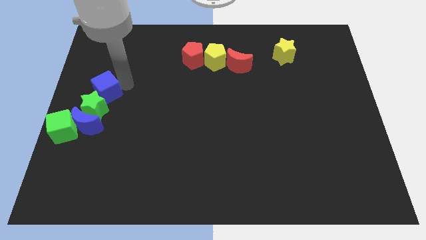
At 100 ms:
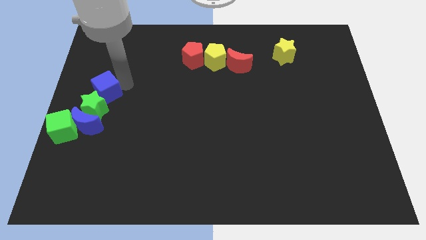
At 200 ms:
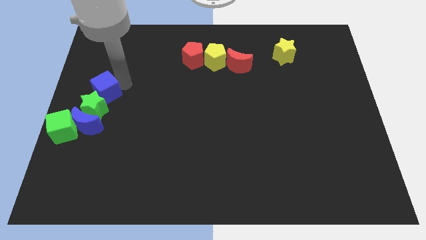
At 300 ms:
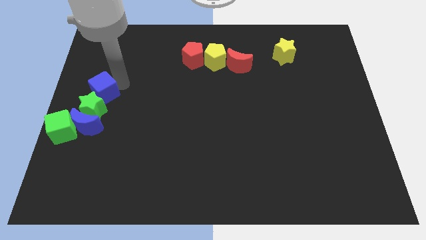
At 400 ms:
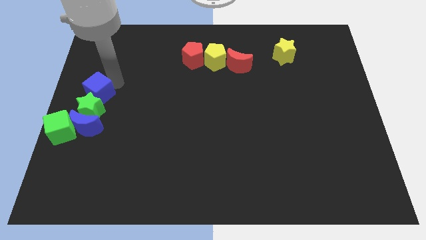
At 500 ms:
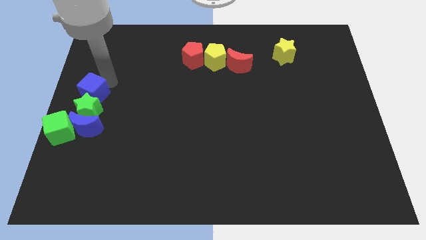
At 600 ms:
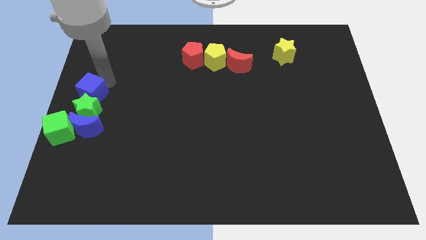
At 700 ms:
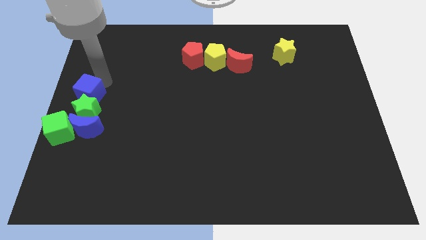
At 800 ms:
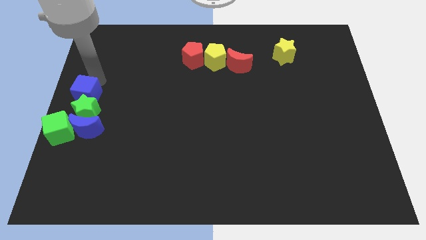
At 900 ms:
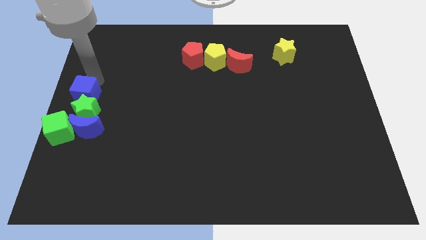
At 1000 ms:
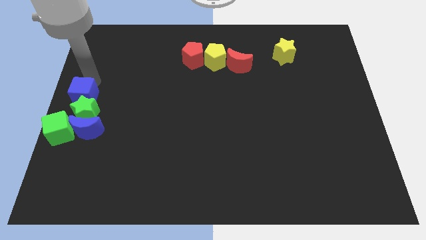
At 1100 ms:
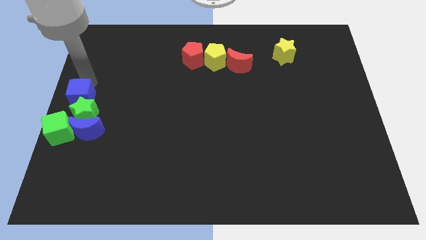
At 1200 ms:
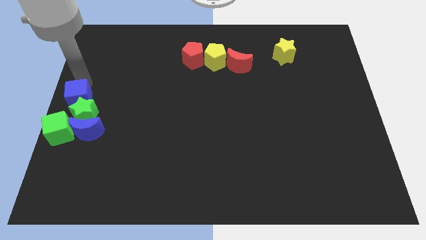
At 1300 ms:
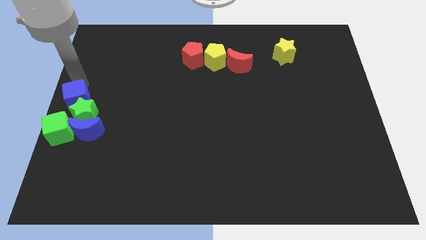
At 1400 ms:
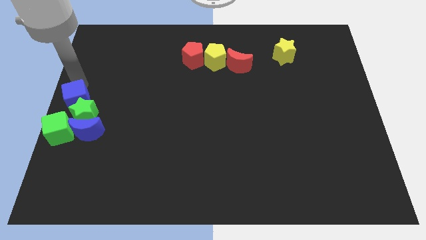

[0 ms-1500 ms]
push the group of blocks to the left center of the board

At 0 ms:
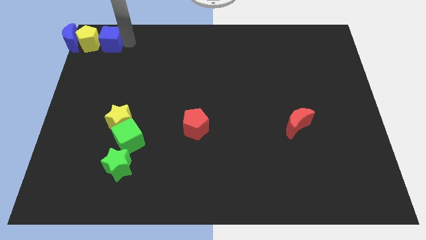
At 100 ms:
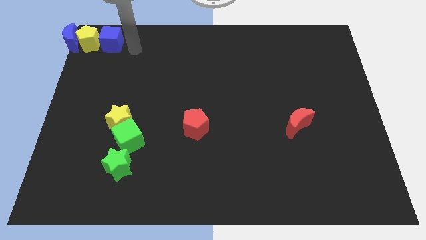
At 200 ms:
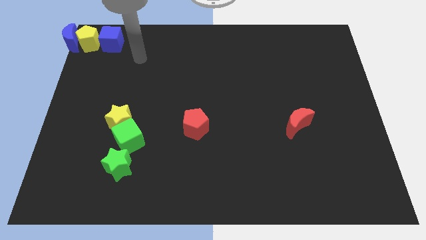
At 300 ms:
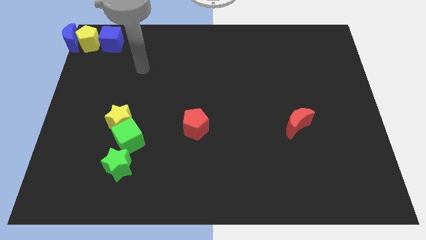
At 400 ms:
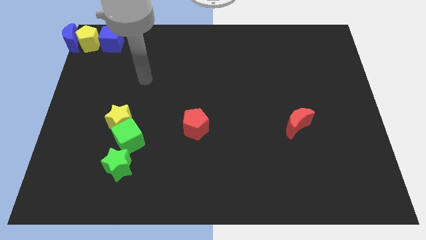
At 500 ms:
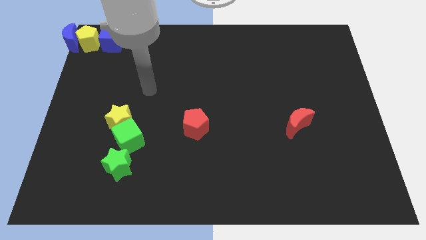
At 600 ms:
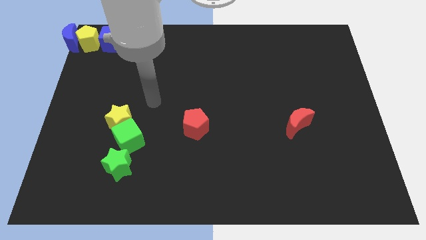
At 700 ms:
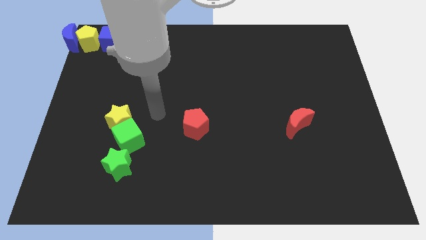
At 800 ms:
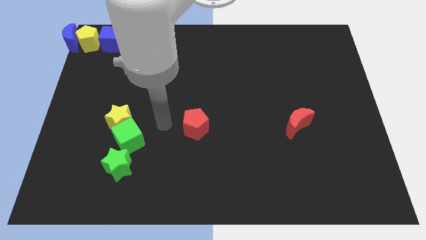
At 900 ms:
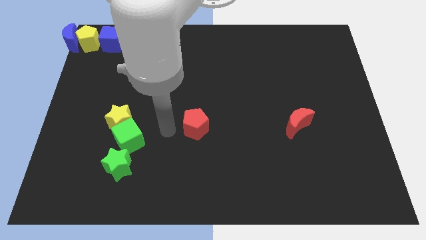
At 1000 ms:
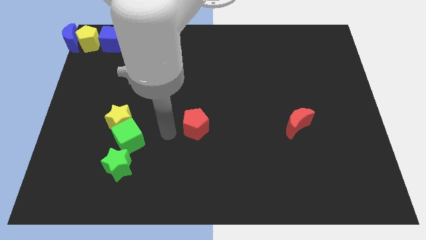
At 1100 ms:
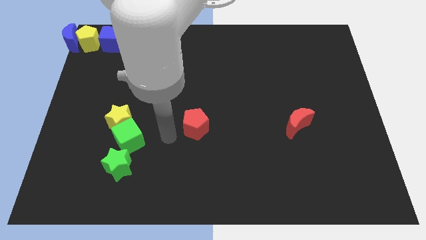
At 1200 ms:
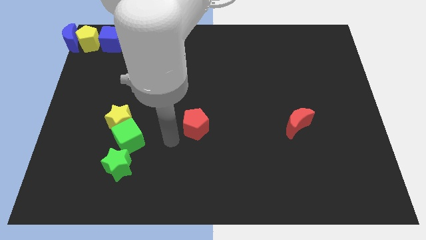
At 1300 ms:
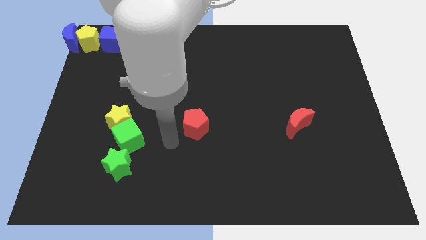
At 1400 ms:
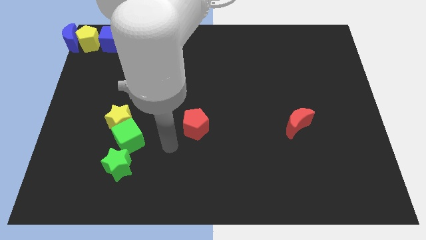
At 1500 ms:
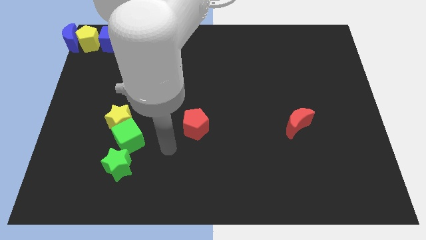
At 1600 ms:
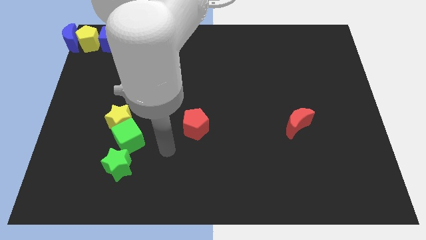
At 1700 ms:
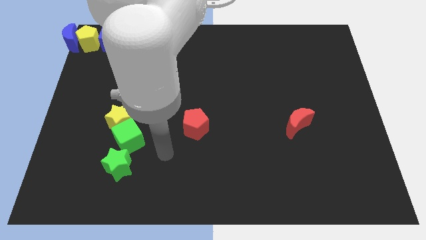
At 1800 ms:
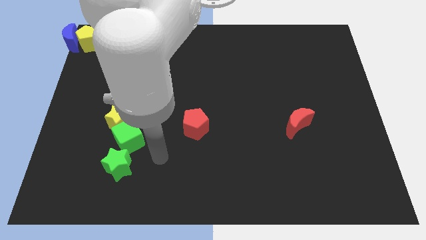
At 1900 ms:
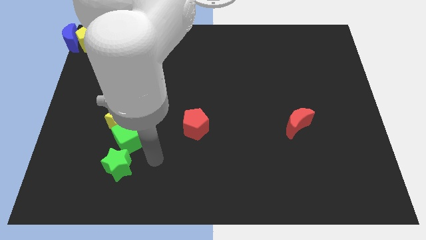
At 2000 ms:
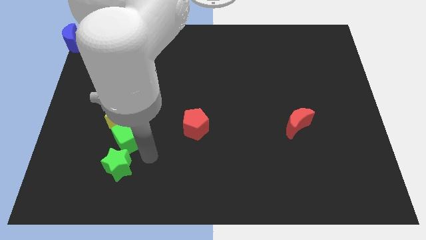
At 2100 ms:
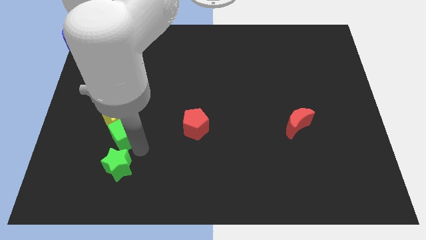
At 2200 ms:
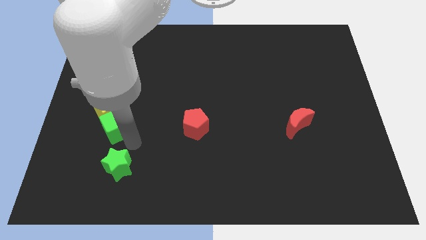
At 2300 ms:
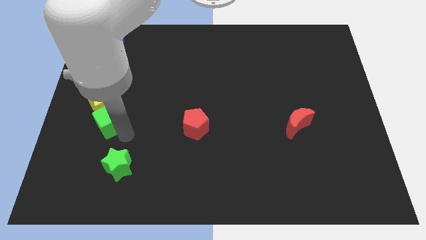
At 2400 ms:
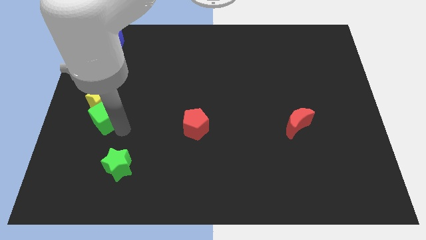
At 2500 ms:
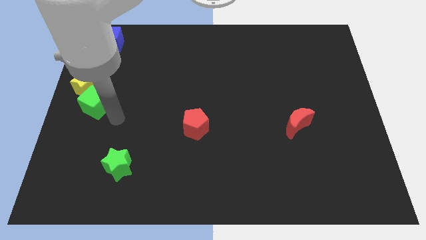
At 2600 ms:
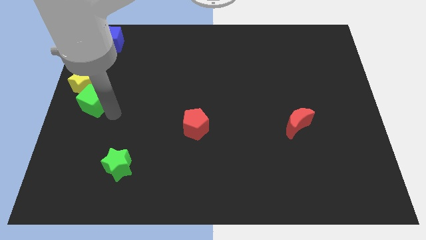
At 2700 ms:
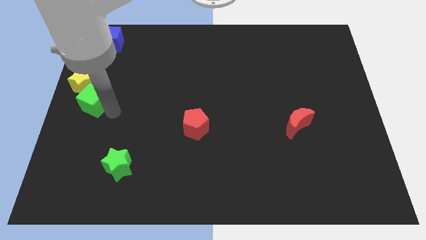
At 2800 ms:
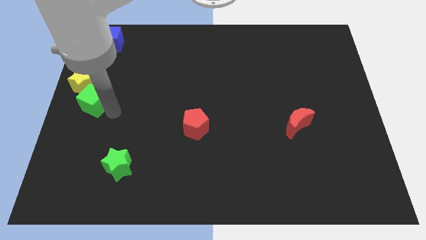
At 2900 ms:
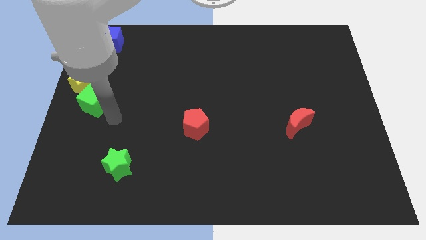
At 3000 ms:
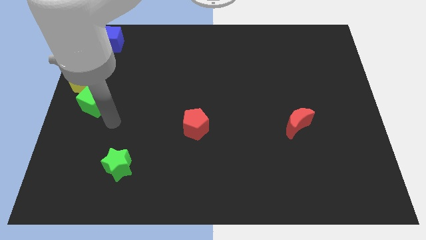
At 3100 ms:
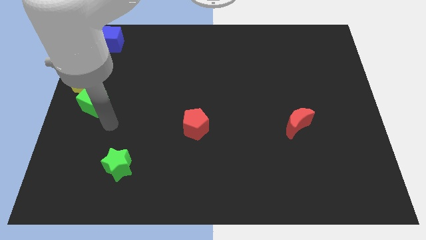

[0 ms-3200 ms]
push the green cube and yellow star towards the top left corner of the board

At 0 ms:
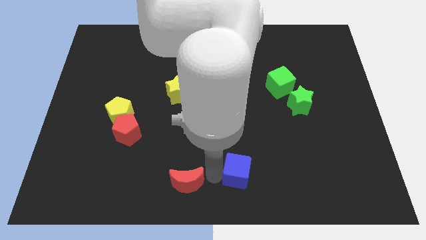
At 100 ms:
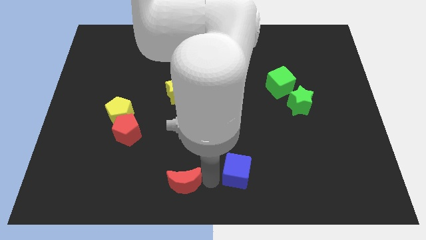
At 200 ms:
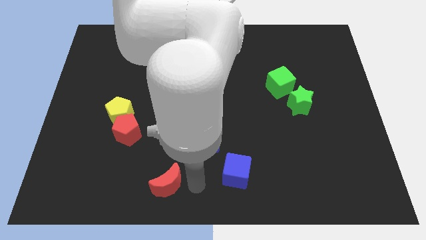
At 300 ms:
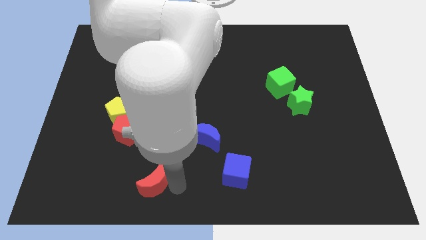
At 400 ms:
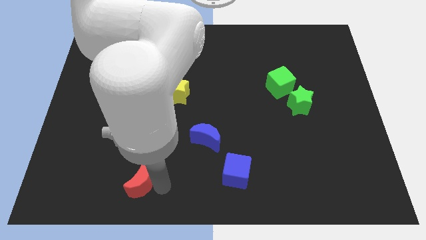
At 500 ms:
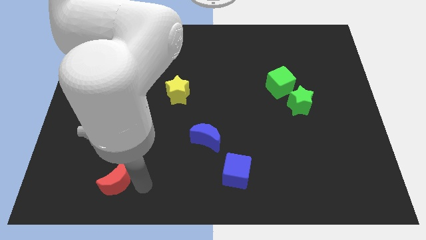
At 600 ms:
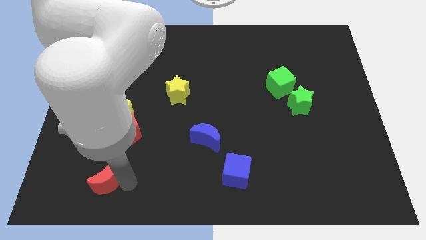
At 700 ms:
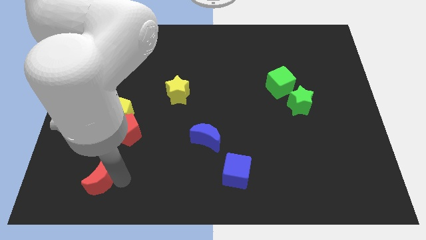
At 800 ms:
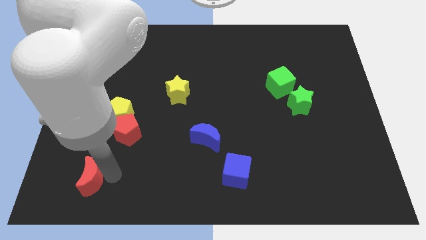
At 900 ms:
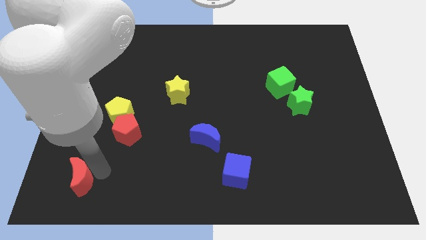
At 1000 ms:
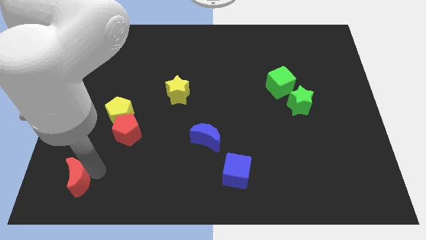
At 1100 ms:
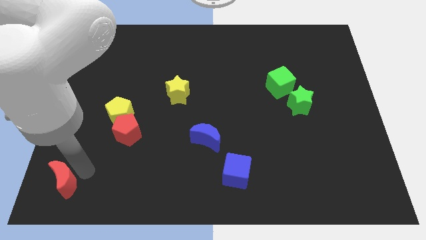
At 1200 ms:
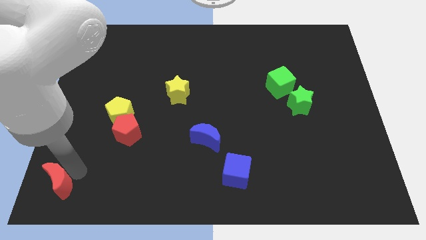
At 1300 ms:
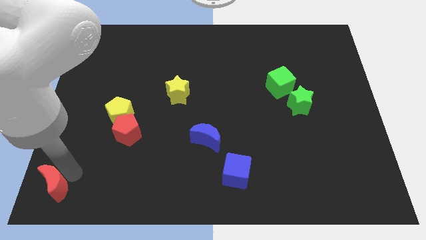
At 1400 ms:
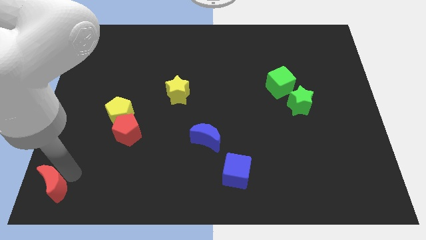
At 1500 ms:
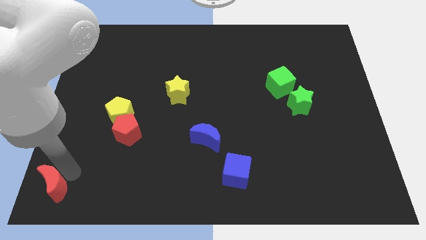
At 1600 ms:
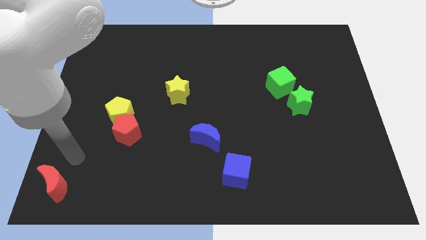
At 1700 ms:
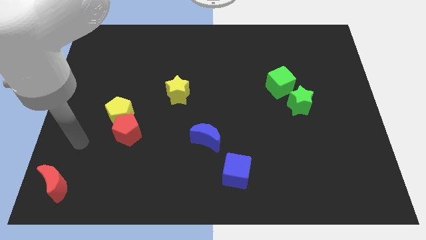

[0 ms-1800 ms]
place the red crescent at bottom left side of the board

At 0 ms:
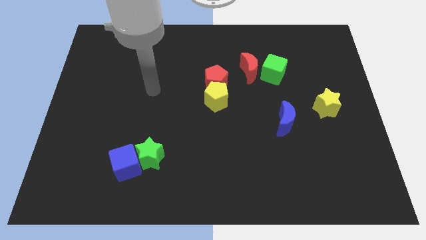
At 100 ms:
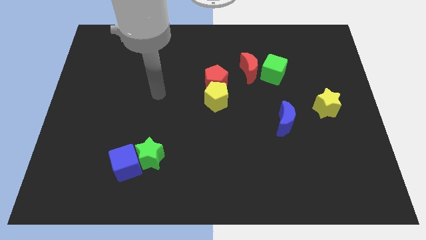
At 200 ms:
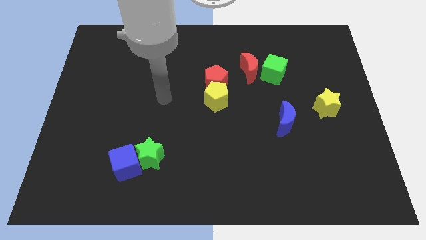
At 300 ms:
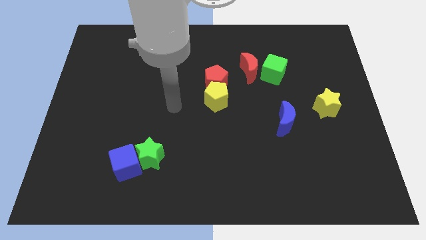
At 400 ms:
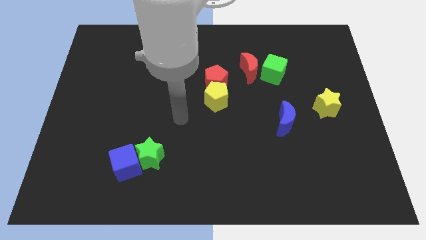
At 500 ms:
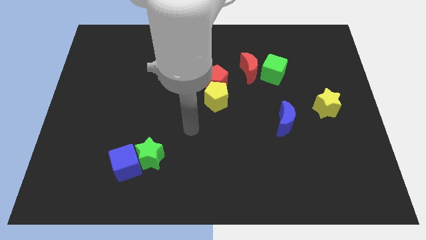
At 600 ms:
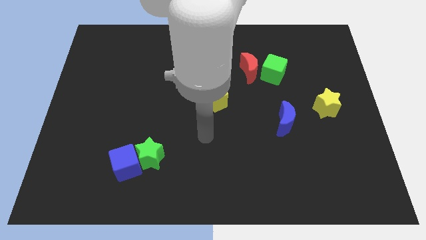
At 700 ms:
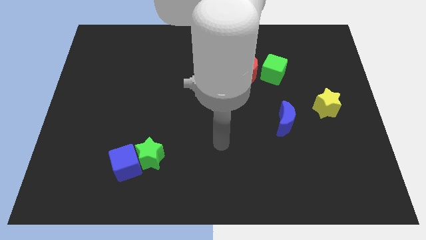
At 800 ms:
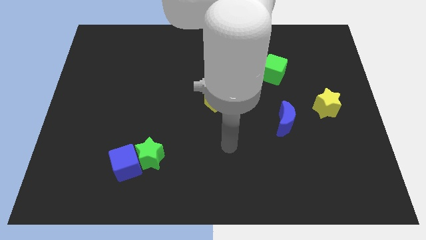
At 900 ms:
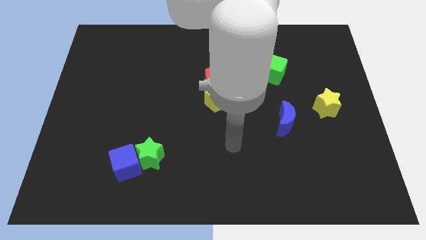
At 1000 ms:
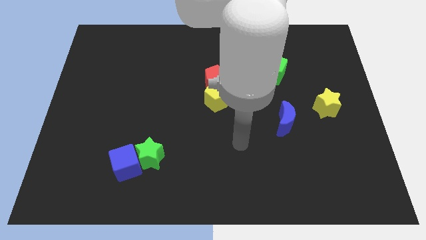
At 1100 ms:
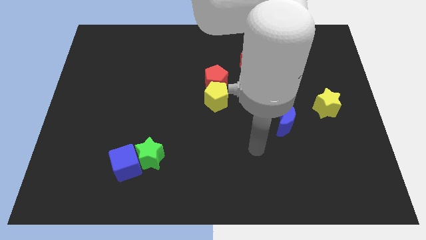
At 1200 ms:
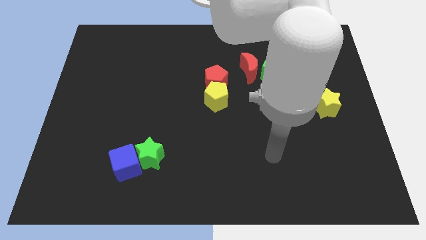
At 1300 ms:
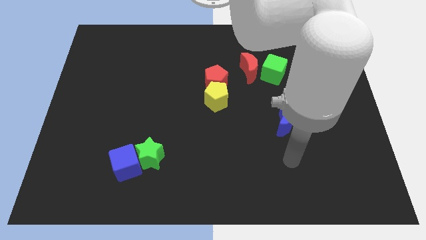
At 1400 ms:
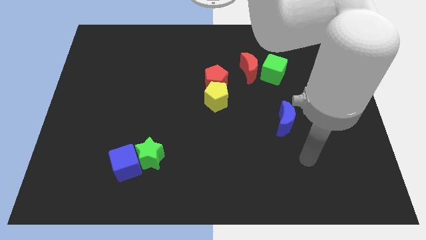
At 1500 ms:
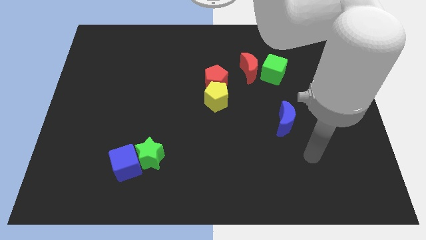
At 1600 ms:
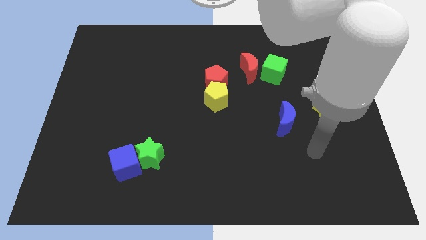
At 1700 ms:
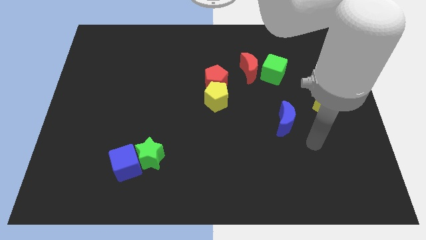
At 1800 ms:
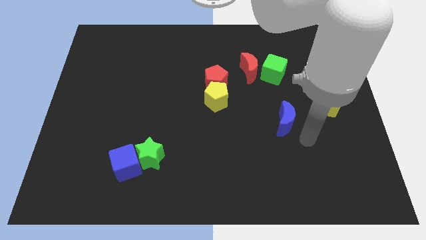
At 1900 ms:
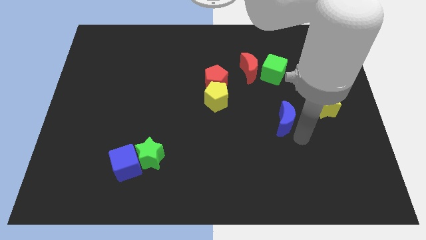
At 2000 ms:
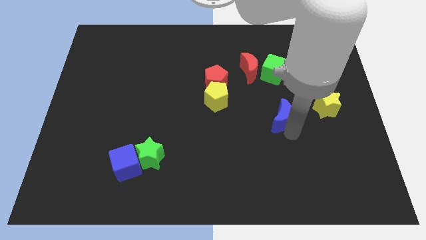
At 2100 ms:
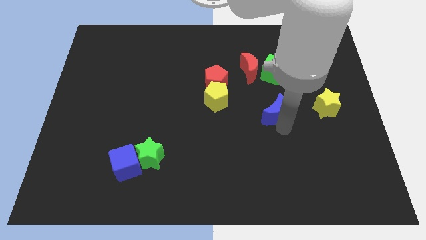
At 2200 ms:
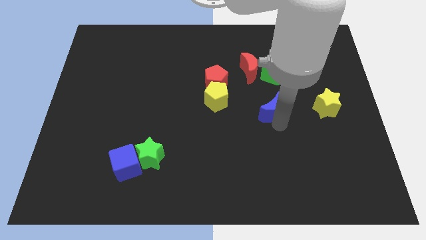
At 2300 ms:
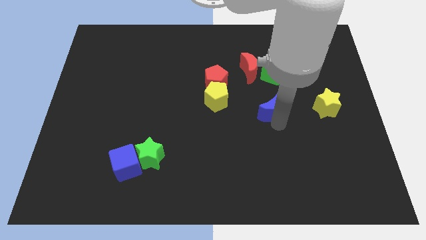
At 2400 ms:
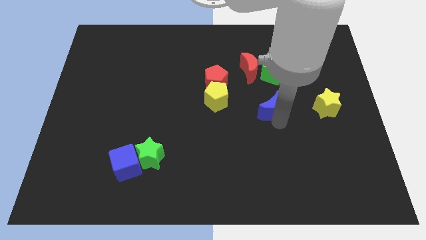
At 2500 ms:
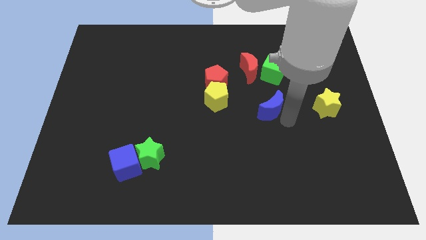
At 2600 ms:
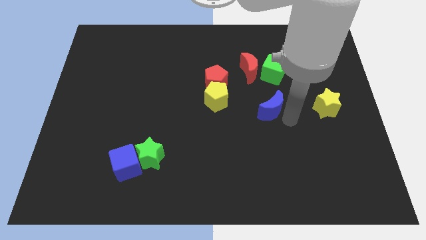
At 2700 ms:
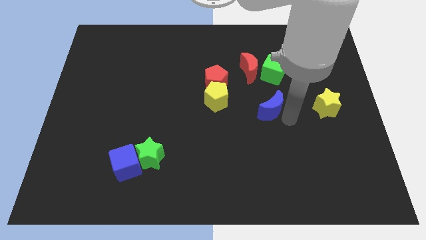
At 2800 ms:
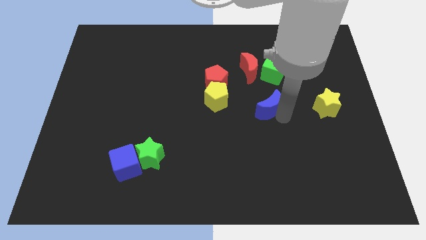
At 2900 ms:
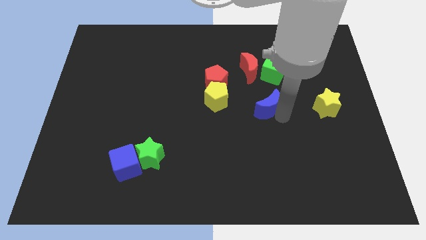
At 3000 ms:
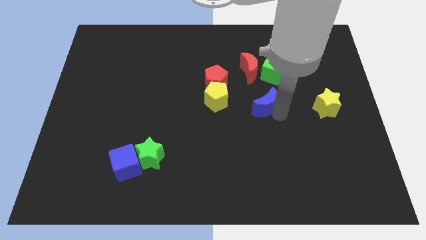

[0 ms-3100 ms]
move the blue crescent slightly towards the center
